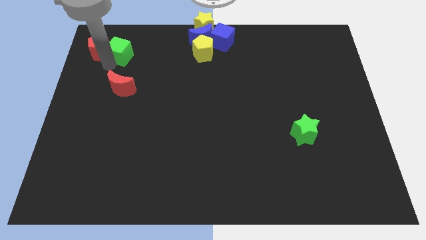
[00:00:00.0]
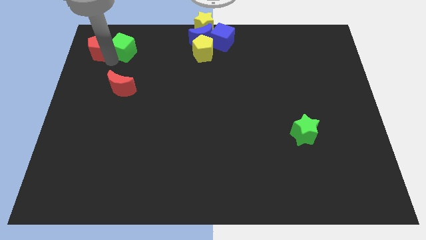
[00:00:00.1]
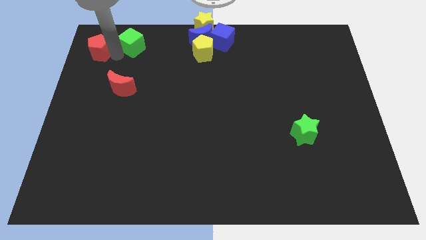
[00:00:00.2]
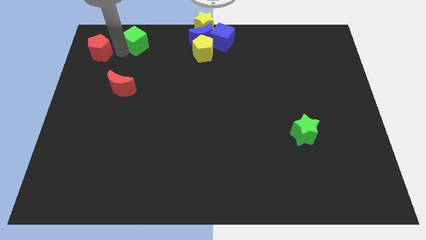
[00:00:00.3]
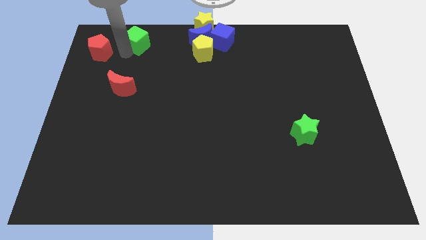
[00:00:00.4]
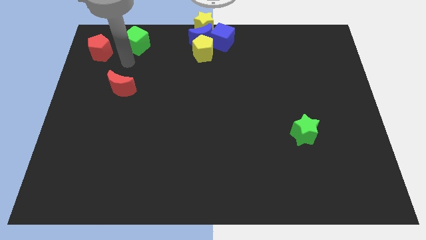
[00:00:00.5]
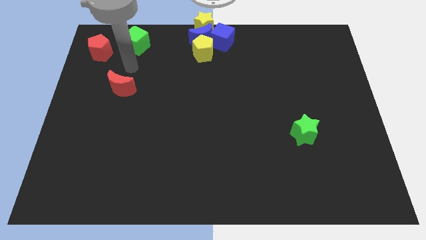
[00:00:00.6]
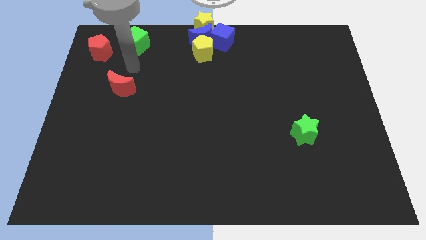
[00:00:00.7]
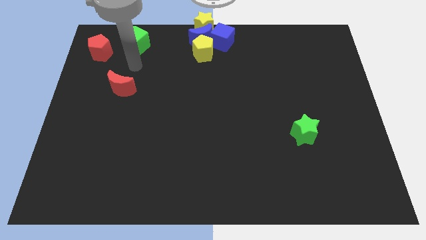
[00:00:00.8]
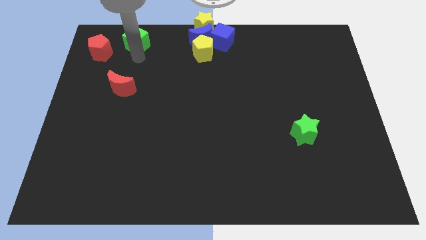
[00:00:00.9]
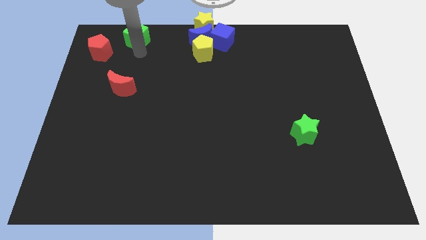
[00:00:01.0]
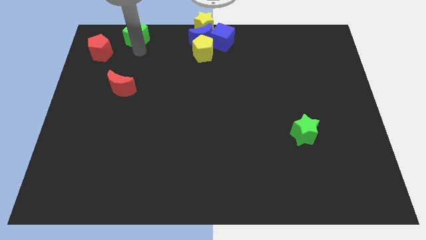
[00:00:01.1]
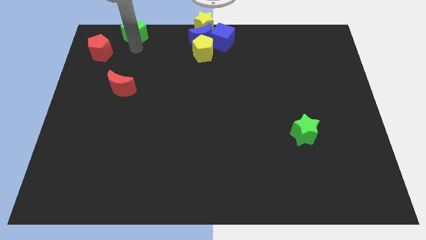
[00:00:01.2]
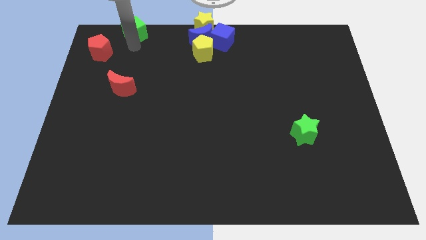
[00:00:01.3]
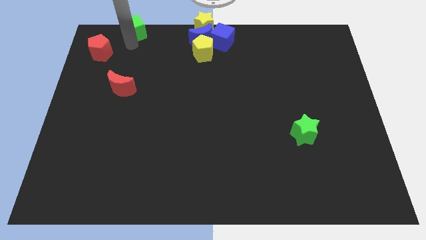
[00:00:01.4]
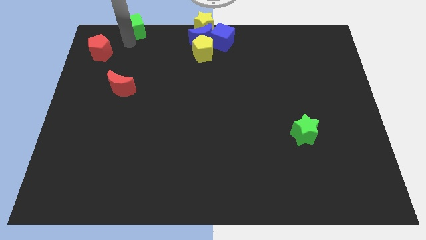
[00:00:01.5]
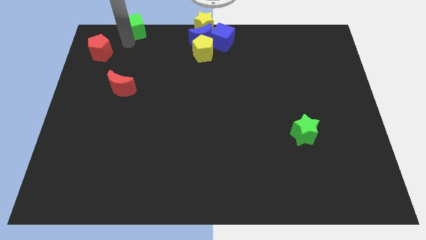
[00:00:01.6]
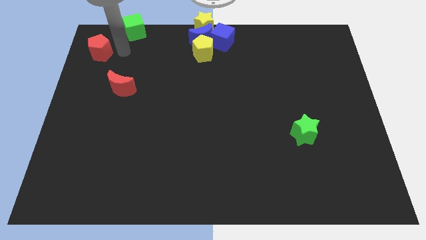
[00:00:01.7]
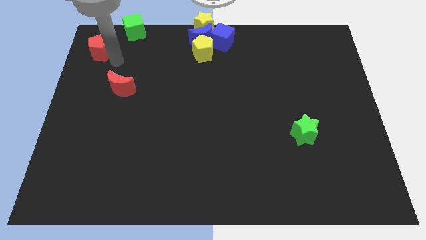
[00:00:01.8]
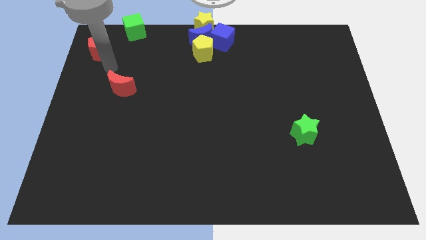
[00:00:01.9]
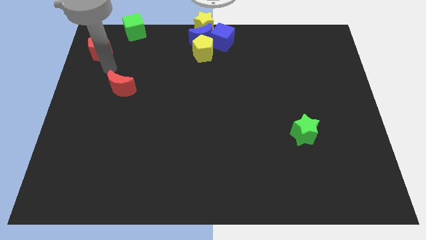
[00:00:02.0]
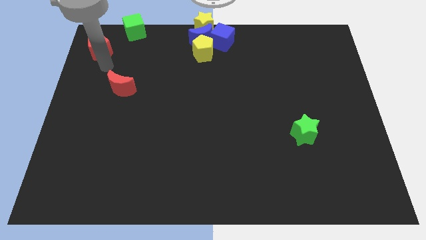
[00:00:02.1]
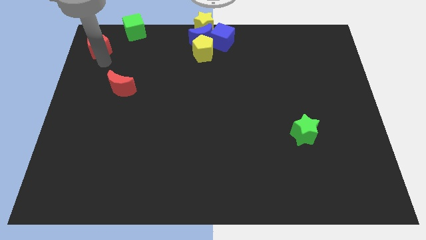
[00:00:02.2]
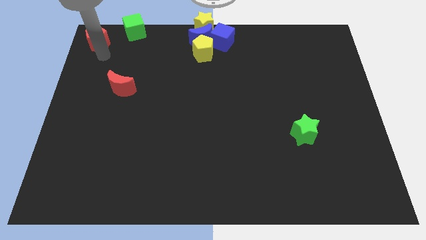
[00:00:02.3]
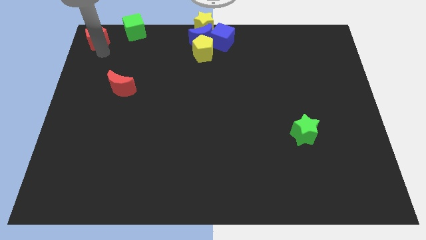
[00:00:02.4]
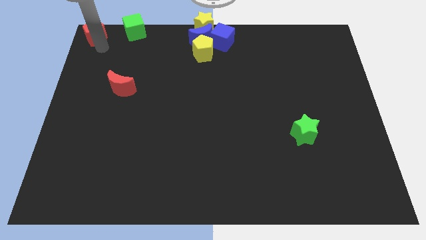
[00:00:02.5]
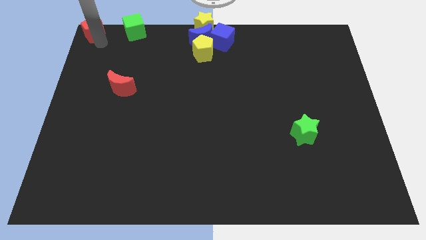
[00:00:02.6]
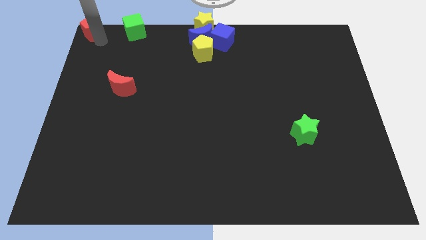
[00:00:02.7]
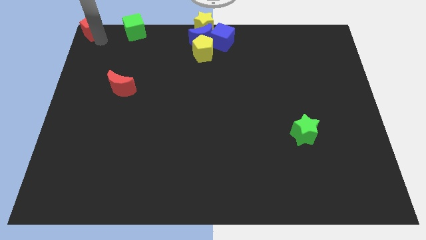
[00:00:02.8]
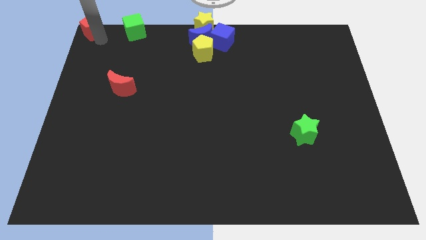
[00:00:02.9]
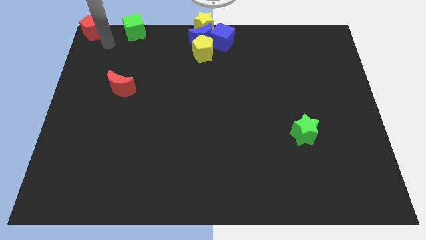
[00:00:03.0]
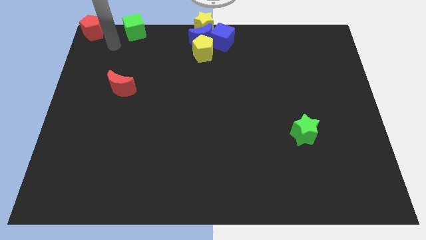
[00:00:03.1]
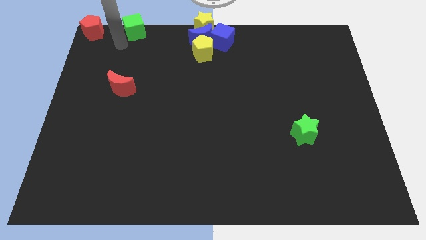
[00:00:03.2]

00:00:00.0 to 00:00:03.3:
separate the green cube from red penatgon

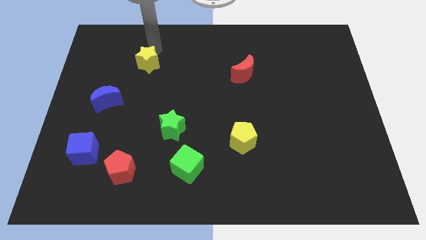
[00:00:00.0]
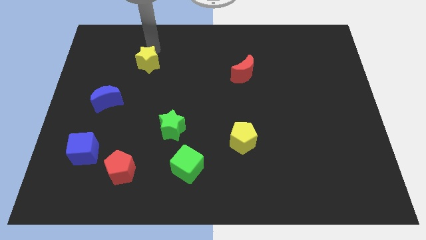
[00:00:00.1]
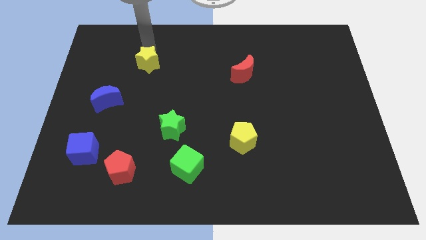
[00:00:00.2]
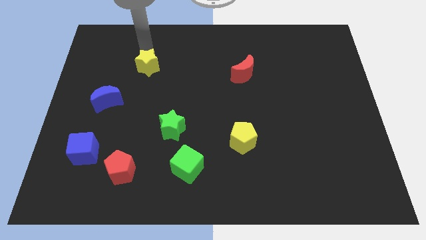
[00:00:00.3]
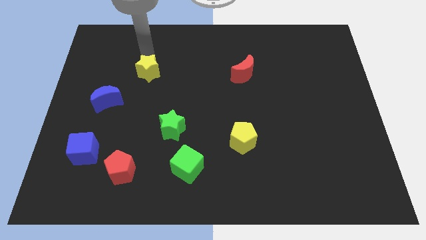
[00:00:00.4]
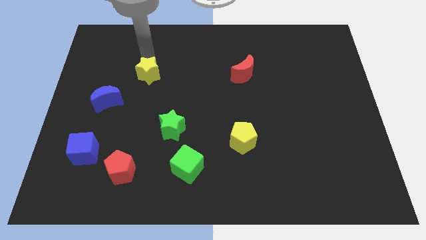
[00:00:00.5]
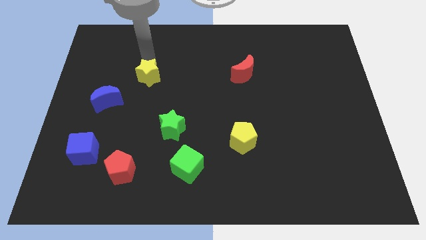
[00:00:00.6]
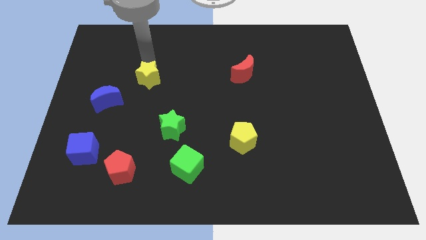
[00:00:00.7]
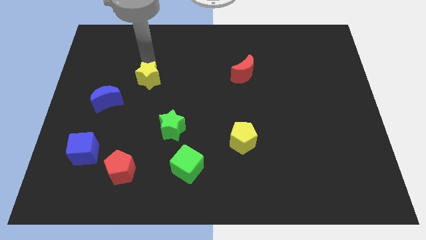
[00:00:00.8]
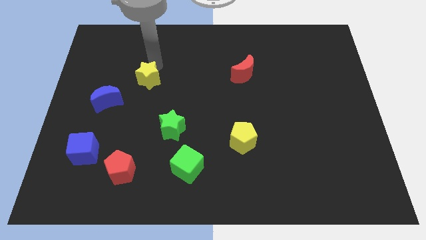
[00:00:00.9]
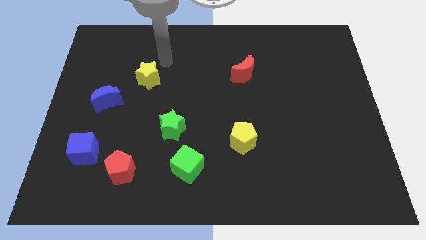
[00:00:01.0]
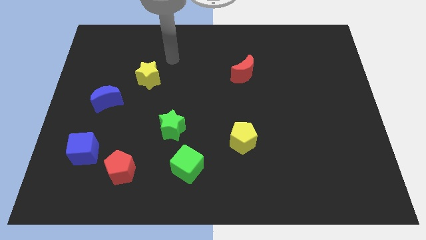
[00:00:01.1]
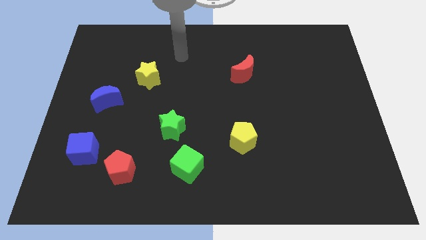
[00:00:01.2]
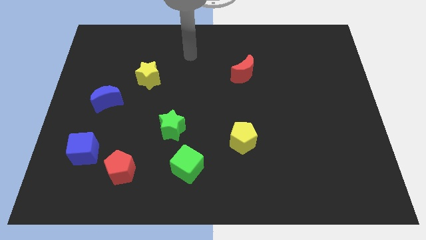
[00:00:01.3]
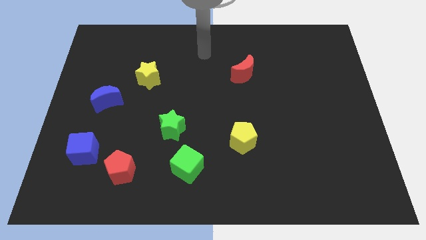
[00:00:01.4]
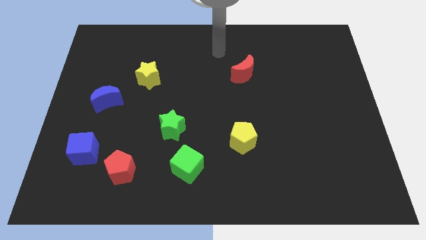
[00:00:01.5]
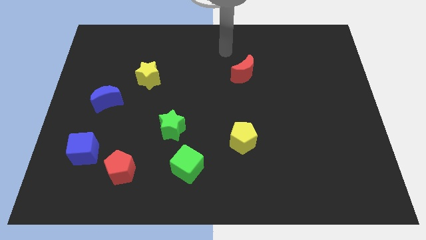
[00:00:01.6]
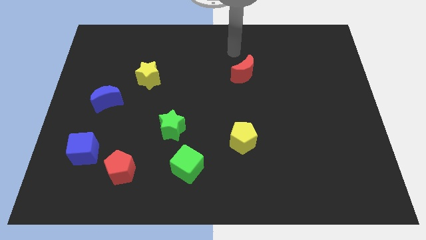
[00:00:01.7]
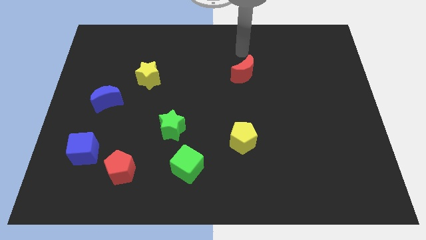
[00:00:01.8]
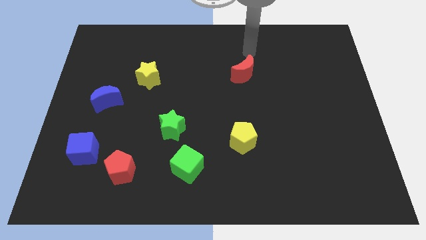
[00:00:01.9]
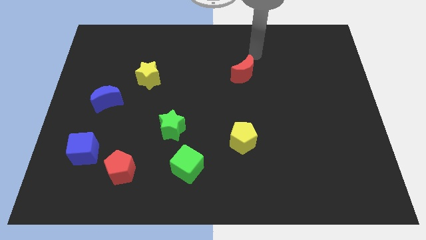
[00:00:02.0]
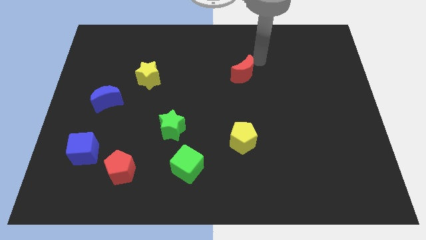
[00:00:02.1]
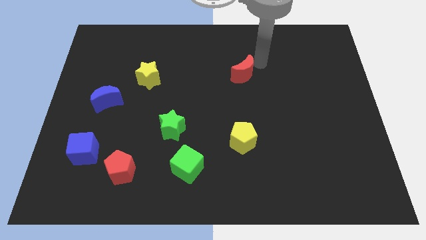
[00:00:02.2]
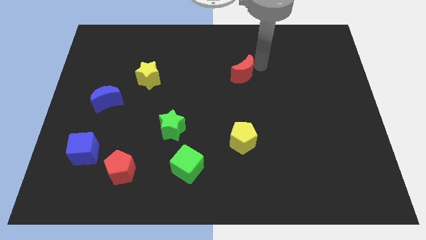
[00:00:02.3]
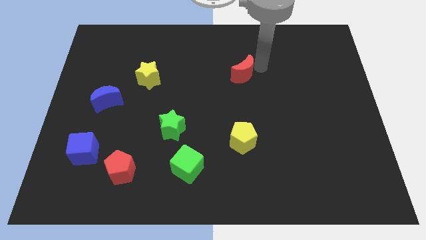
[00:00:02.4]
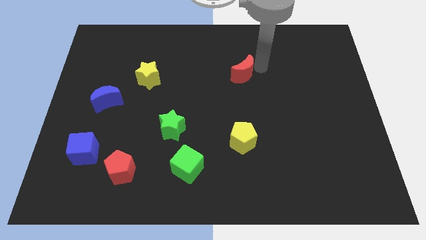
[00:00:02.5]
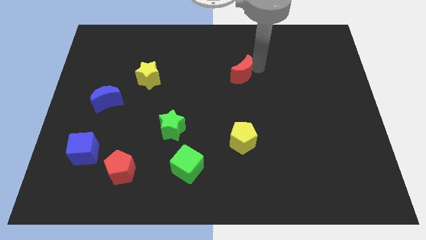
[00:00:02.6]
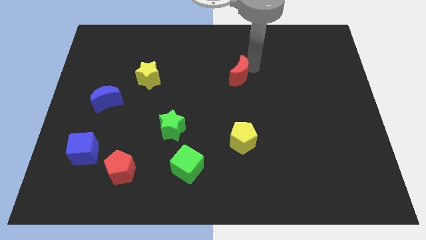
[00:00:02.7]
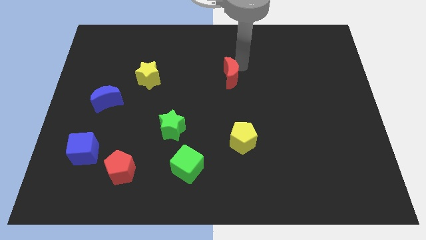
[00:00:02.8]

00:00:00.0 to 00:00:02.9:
move your arm into the red crescent

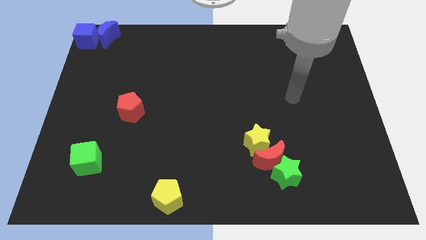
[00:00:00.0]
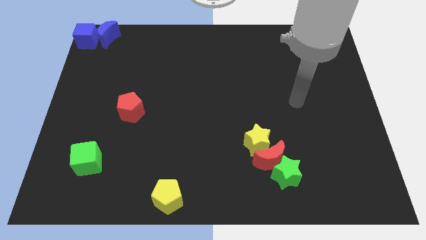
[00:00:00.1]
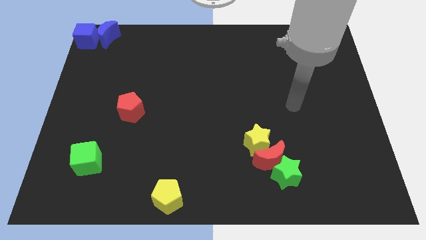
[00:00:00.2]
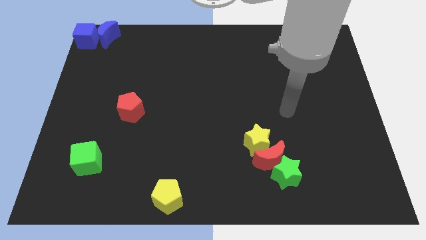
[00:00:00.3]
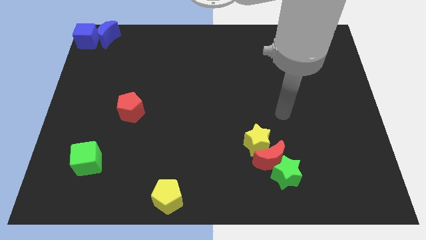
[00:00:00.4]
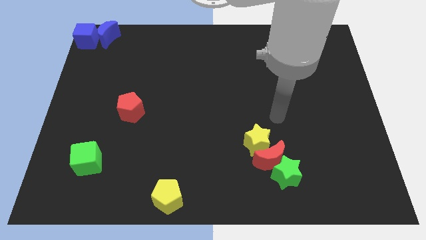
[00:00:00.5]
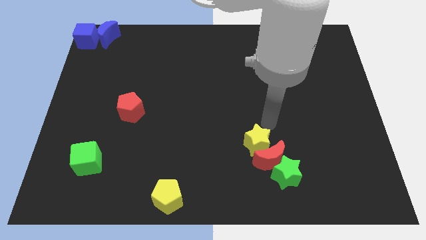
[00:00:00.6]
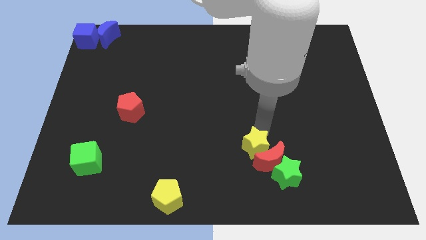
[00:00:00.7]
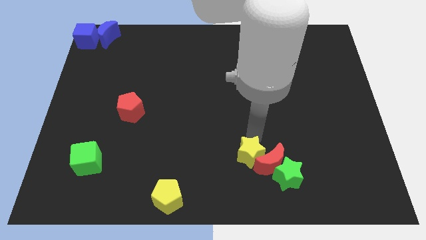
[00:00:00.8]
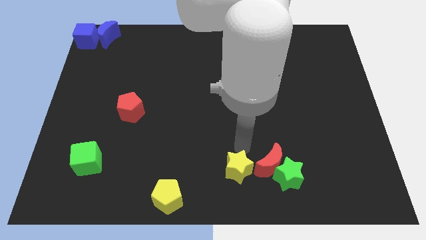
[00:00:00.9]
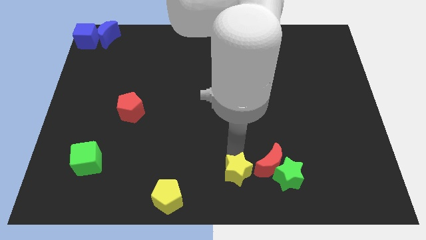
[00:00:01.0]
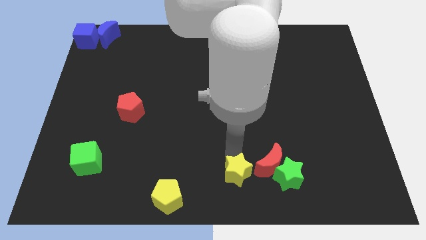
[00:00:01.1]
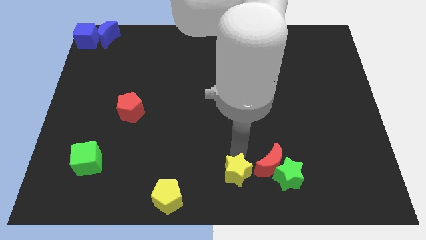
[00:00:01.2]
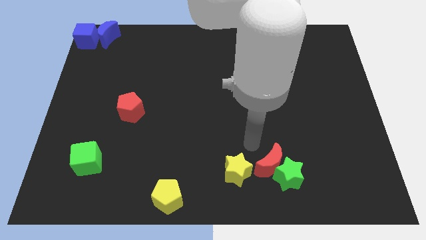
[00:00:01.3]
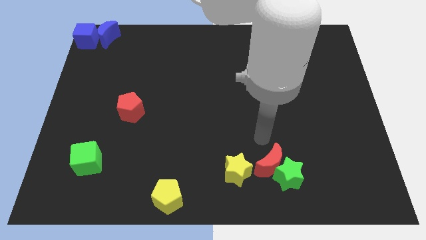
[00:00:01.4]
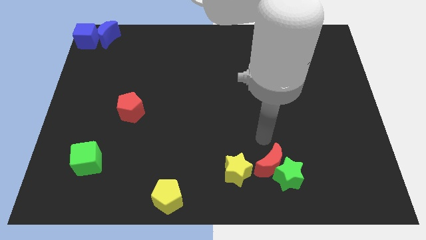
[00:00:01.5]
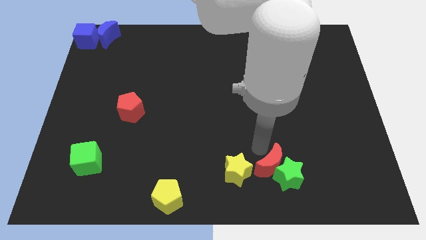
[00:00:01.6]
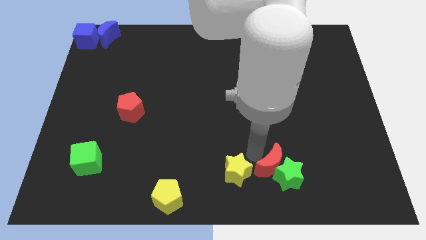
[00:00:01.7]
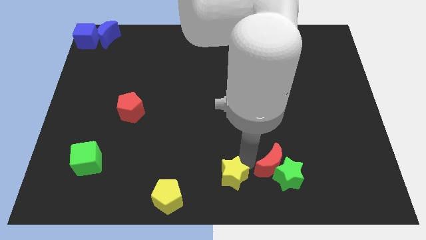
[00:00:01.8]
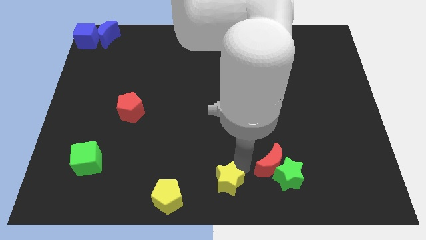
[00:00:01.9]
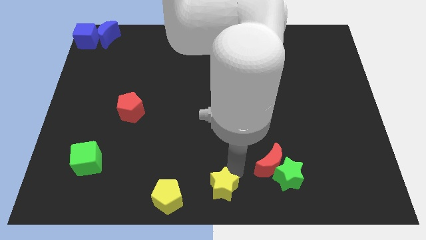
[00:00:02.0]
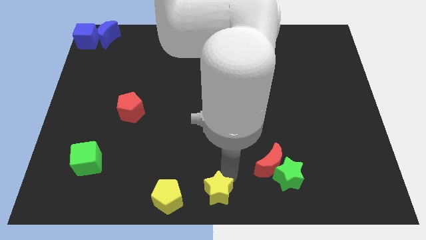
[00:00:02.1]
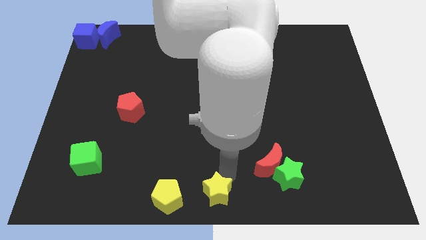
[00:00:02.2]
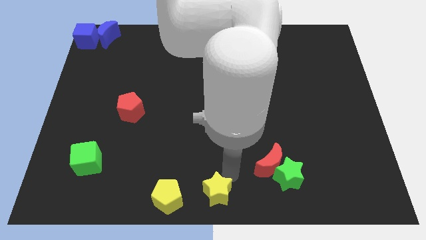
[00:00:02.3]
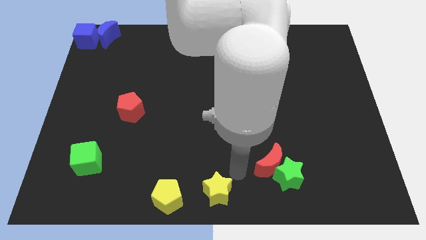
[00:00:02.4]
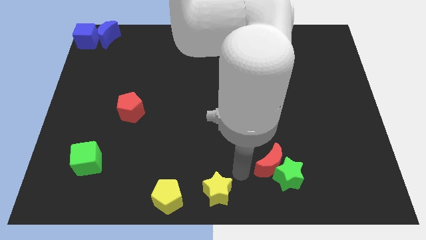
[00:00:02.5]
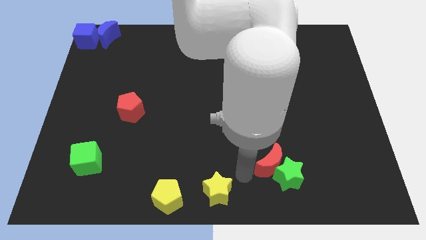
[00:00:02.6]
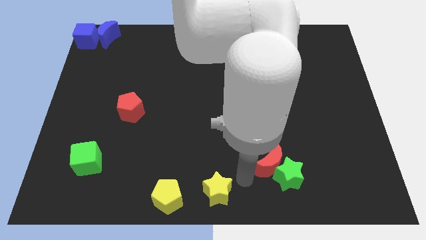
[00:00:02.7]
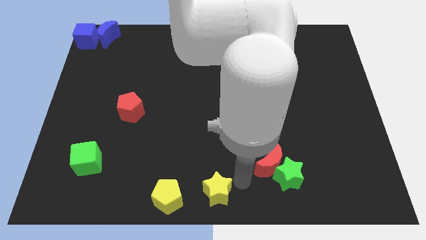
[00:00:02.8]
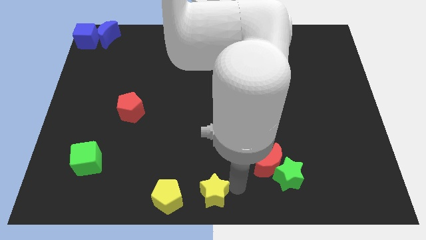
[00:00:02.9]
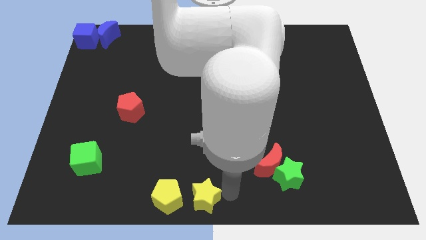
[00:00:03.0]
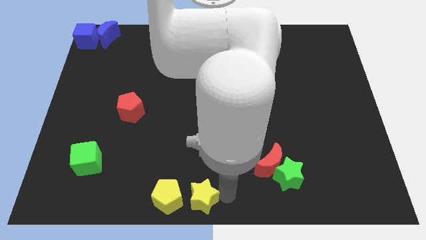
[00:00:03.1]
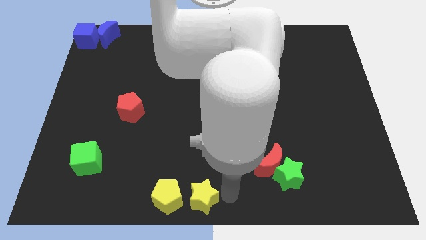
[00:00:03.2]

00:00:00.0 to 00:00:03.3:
push the yellow star parallel right to the yellow pentagon
